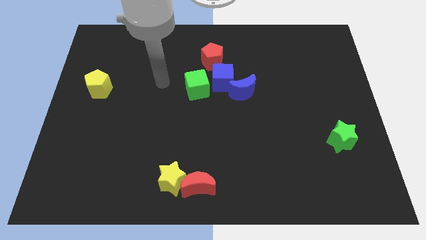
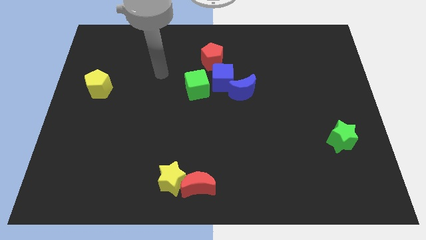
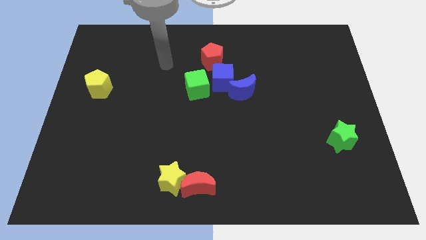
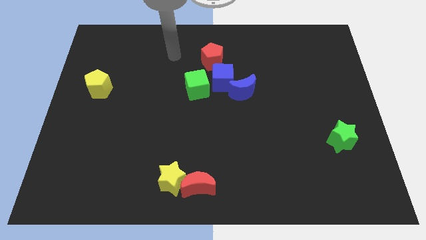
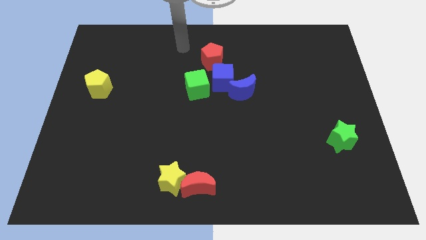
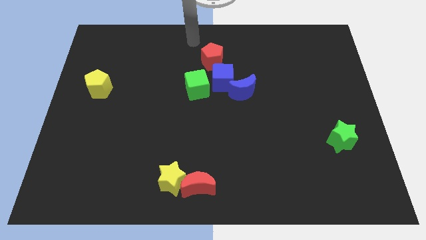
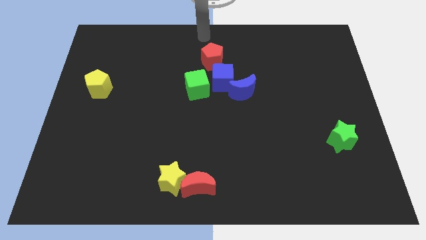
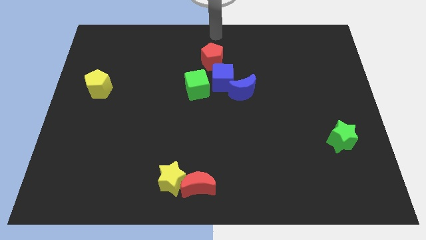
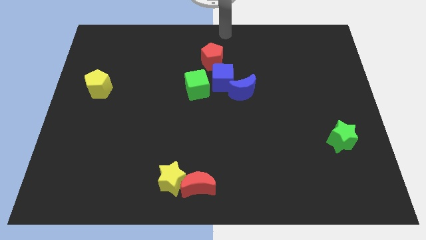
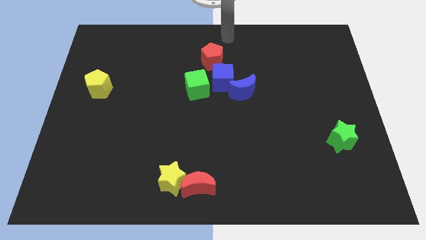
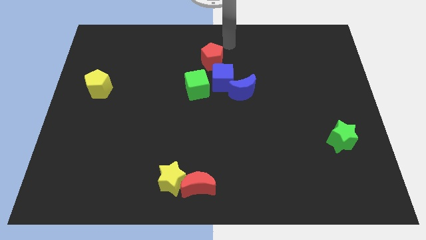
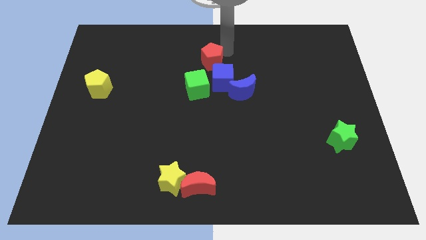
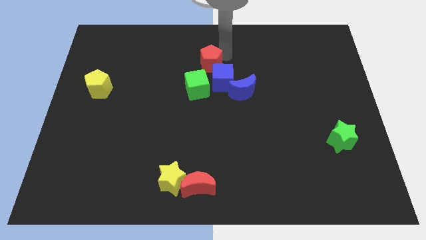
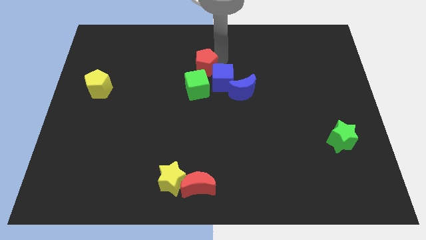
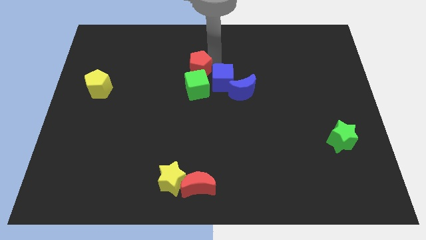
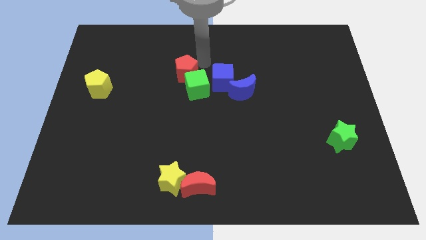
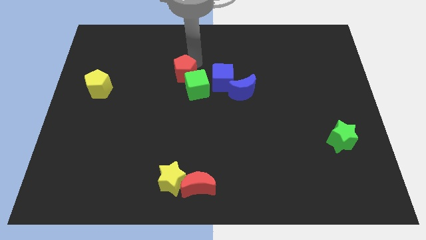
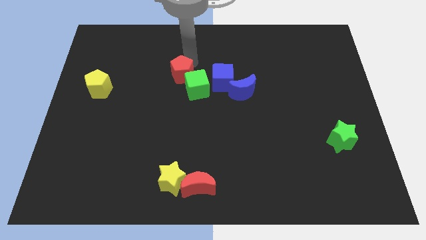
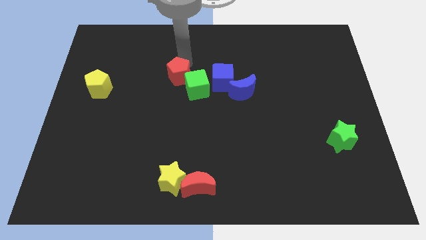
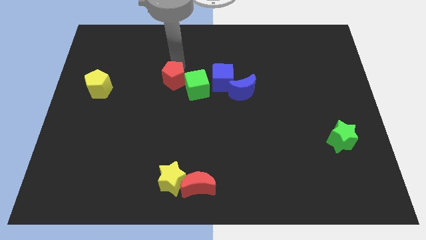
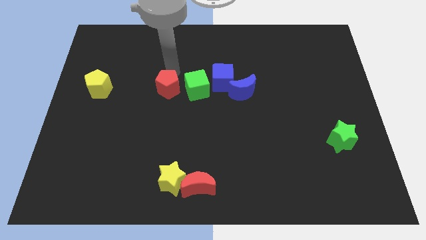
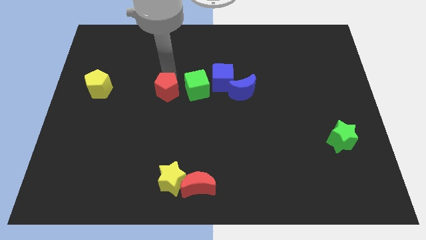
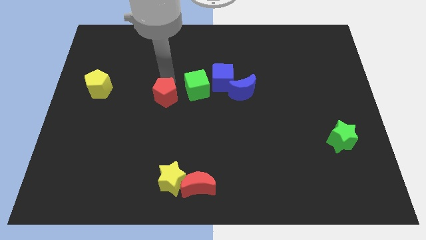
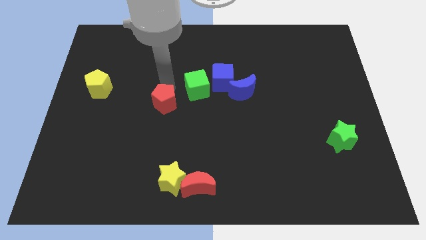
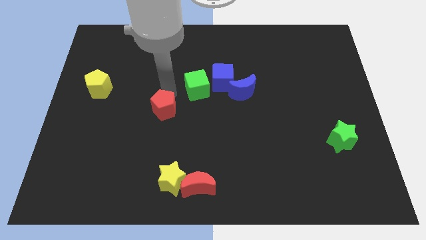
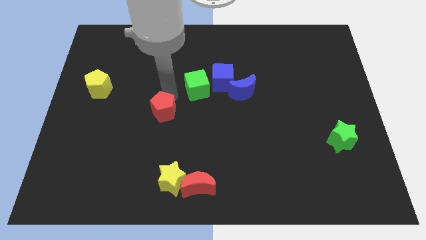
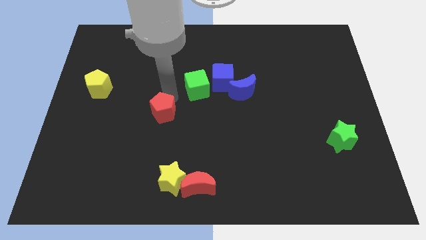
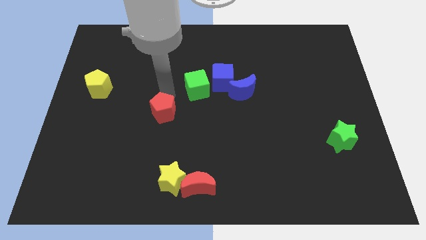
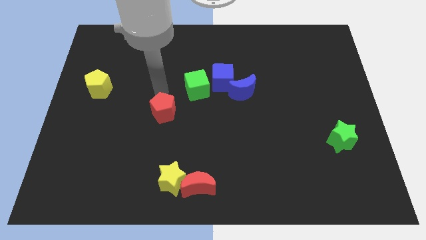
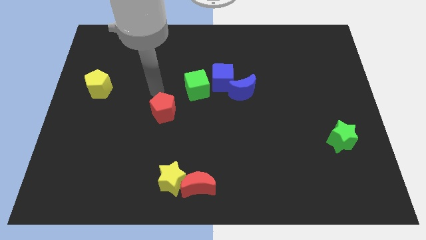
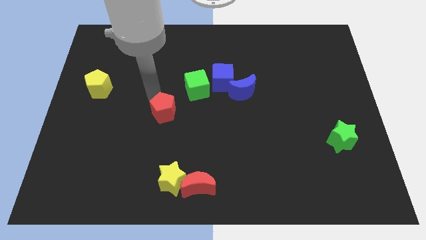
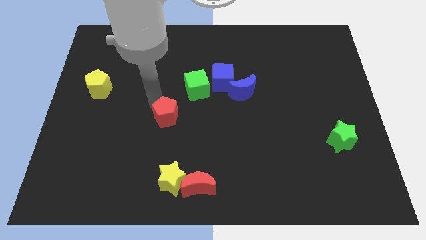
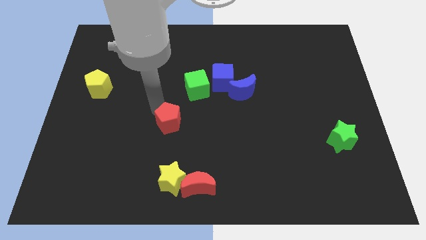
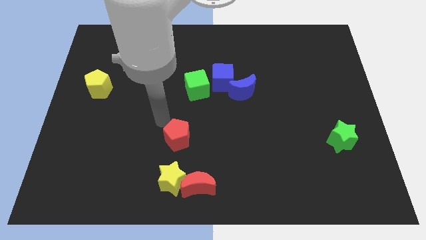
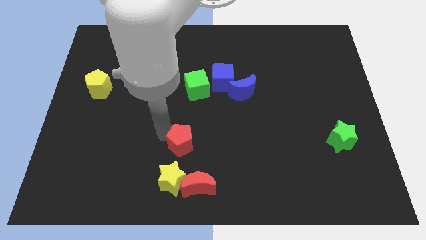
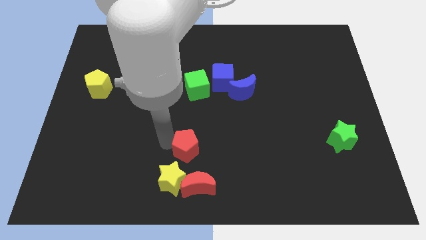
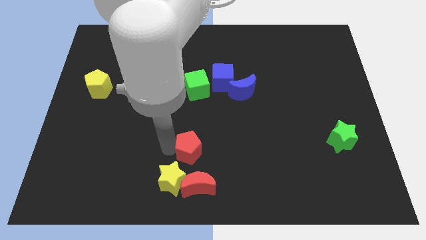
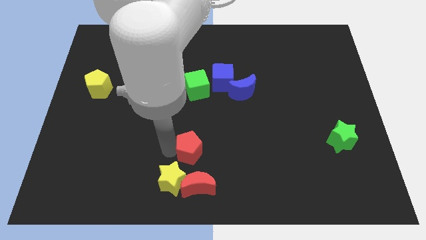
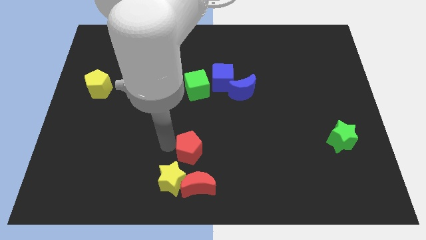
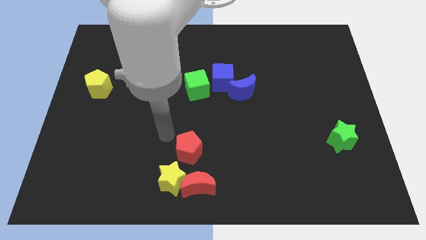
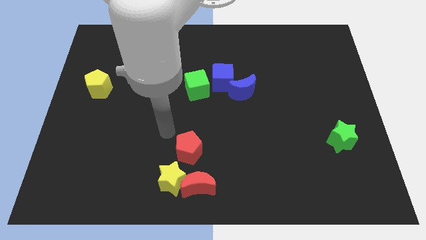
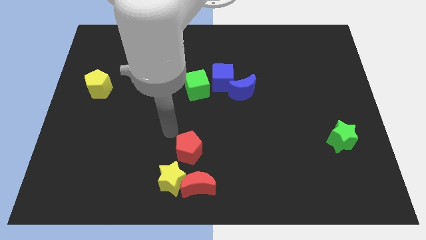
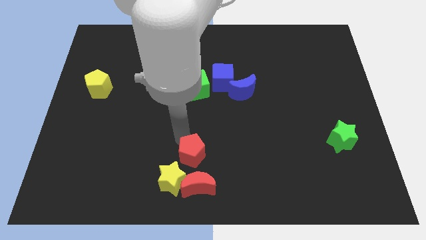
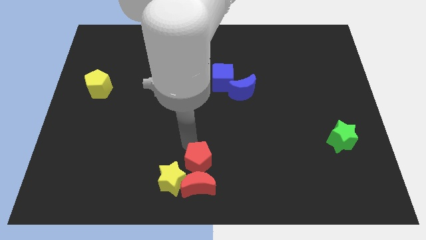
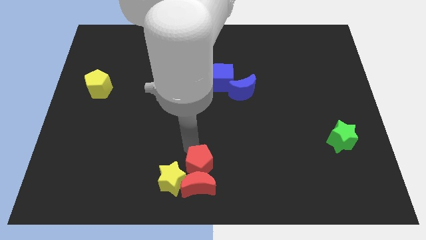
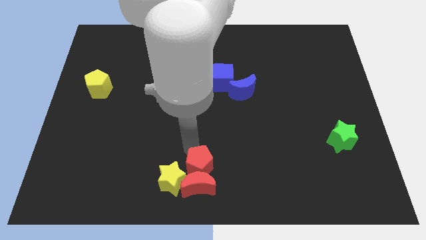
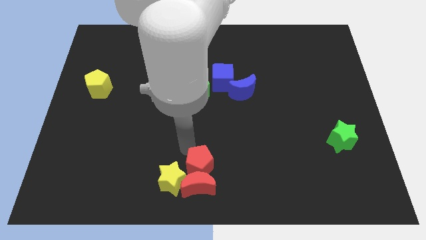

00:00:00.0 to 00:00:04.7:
move red pentagon into red moon

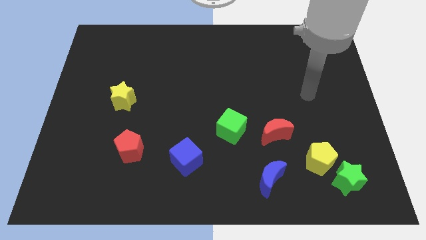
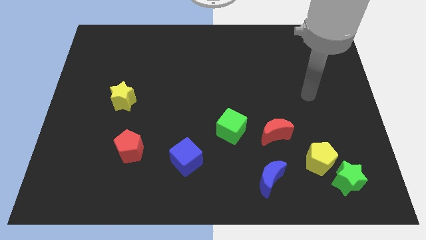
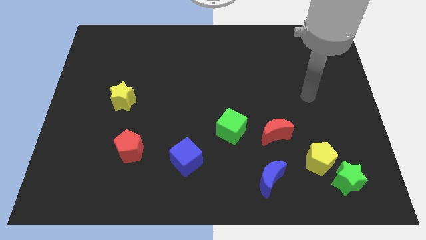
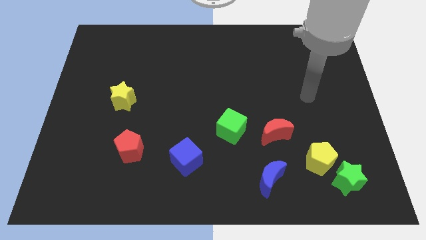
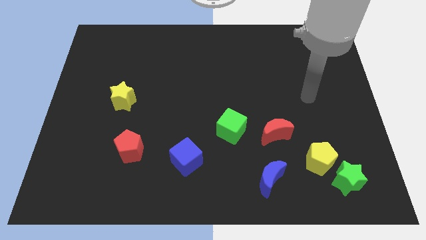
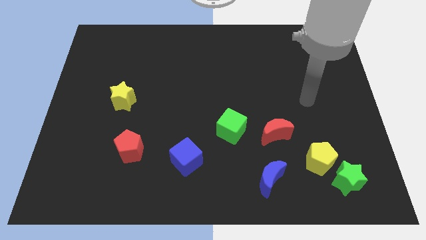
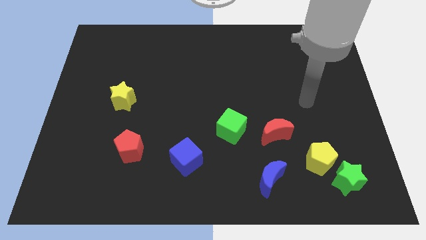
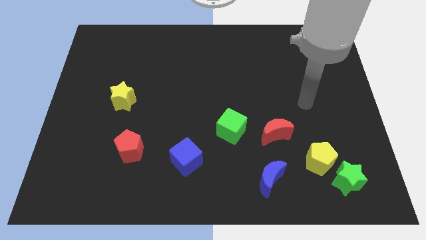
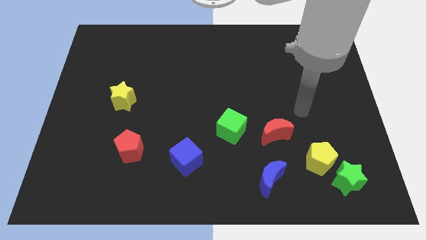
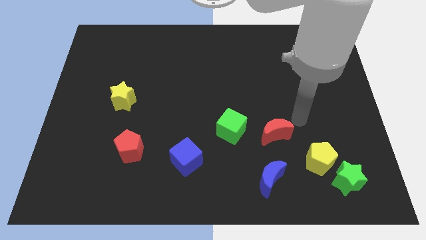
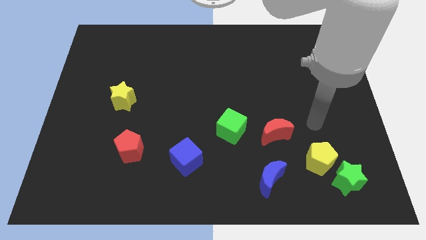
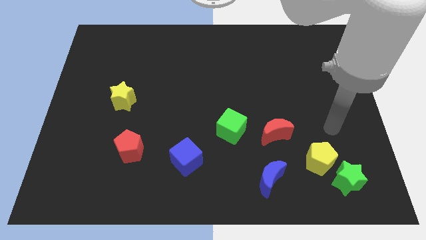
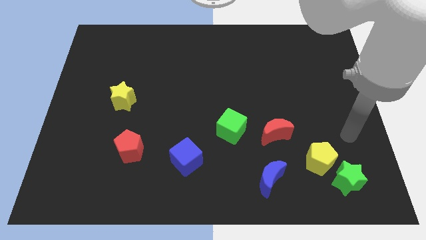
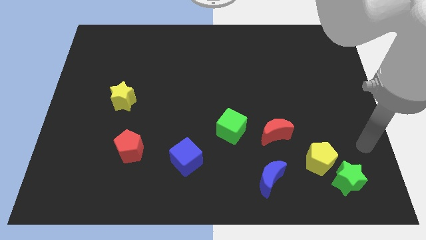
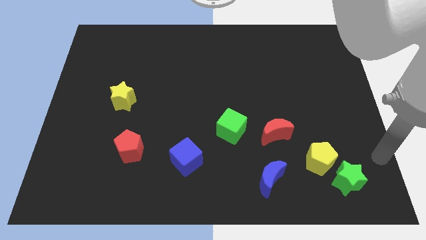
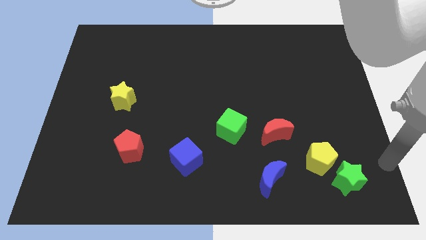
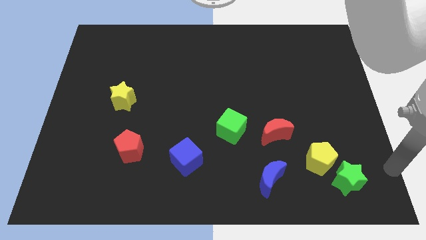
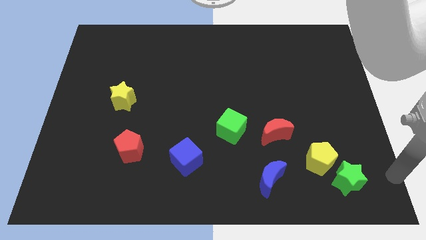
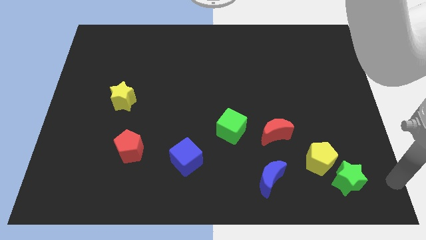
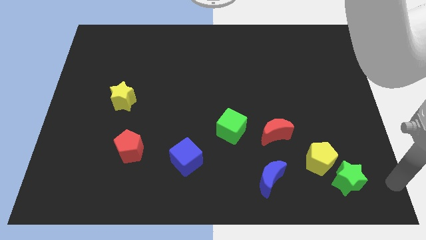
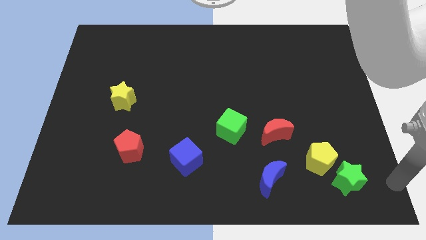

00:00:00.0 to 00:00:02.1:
move the pointer towards the bottom right corner of the board

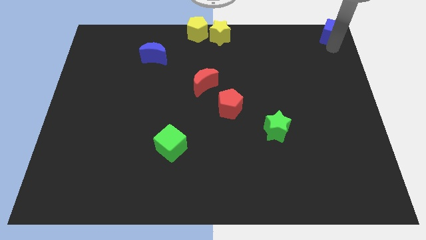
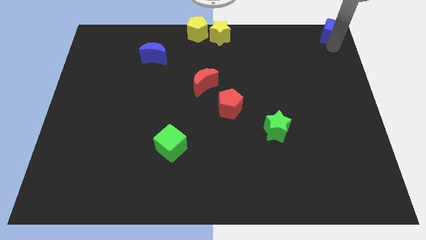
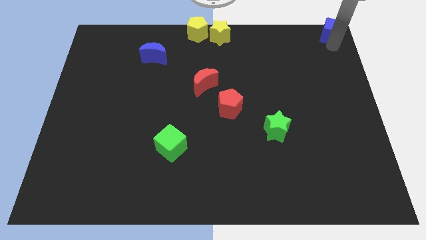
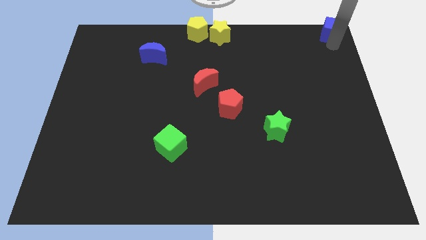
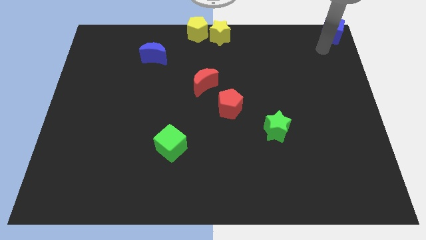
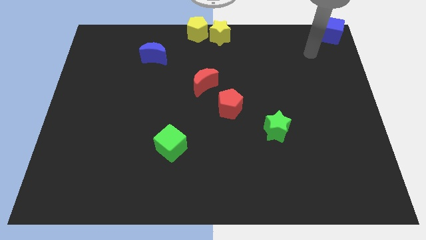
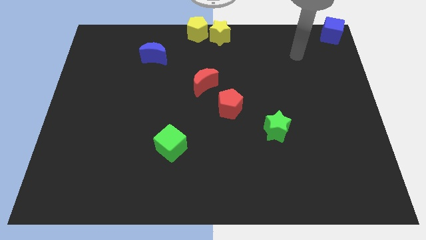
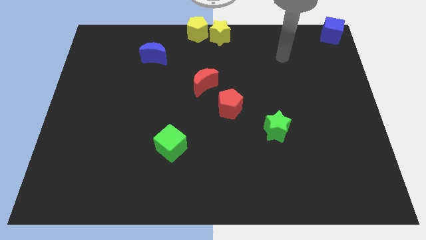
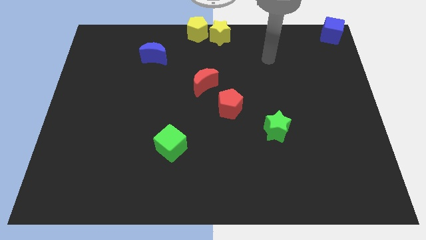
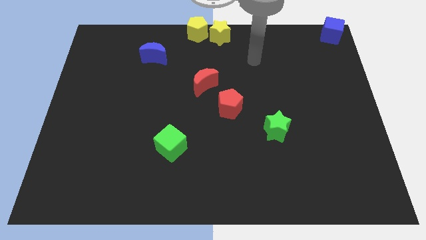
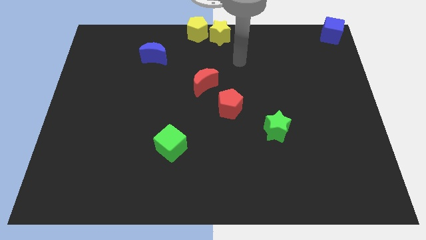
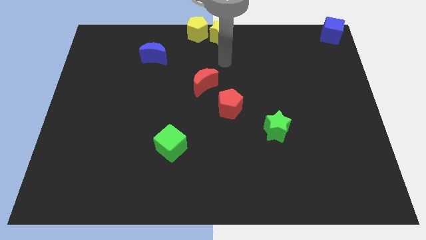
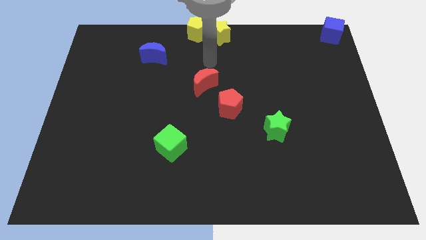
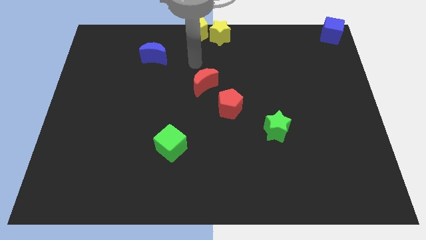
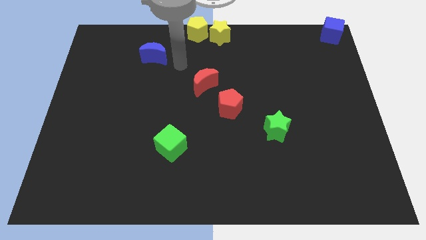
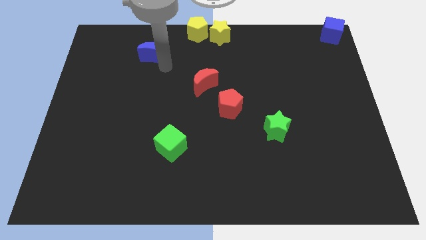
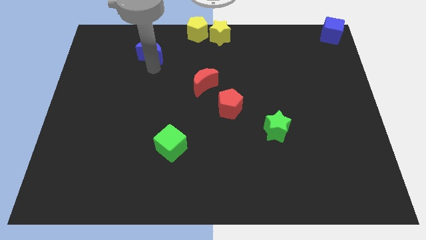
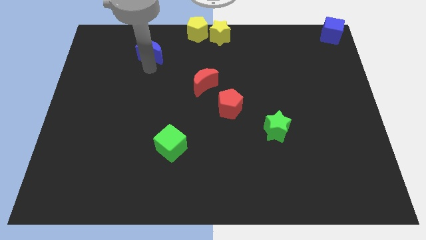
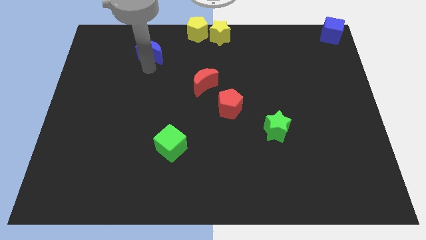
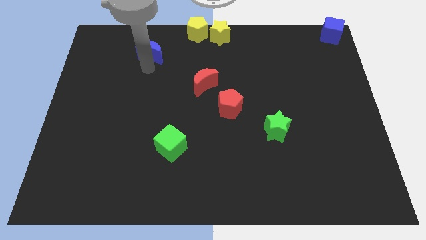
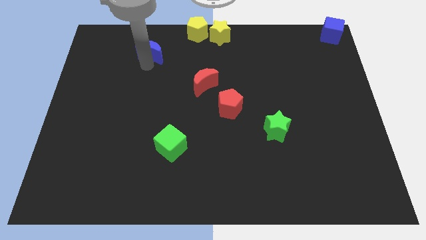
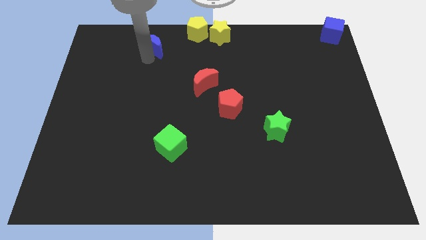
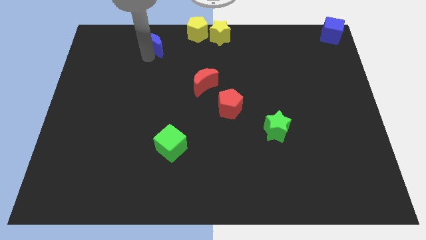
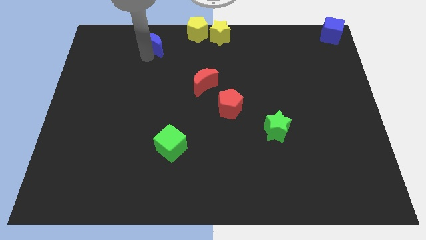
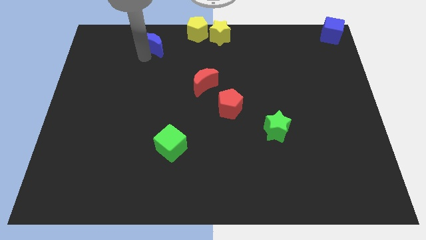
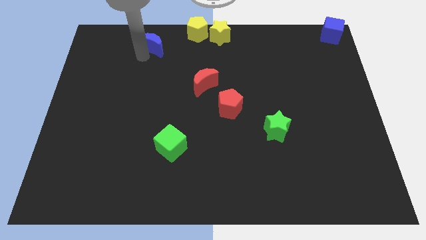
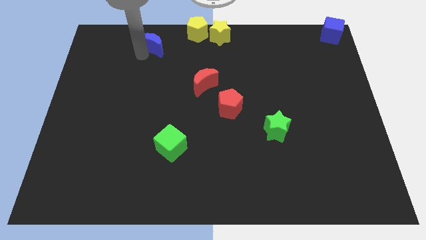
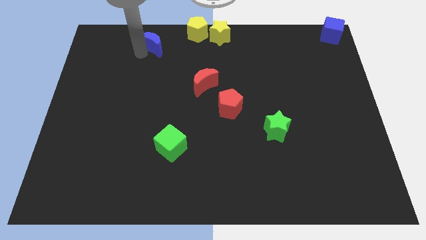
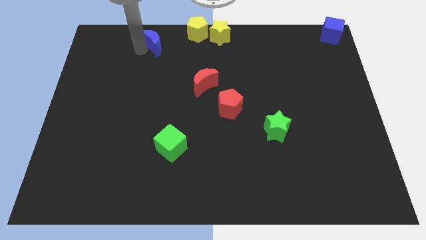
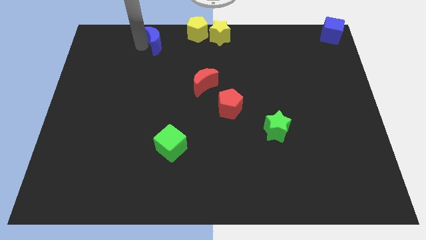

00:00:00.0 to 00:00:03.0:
move blue moon to the top
